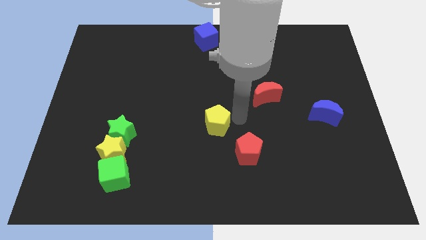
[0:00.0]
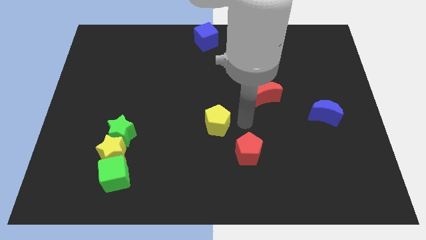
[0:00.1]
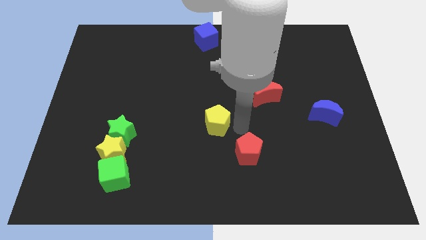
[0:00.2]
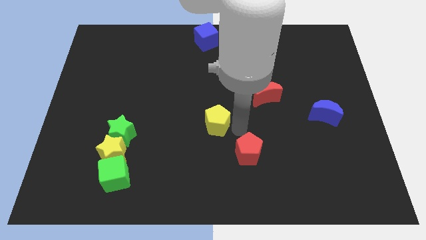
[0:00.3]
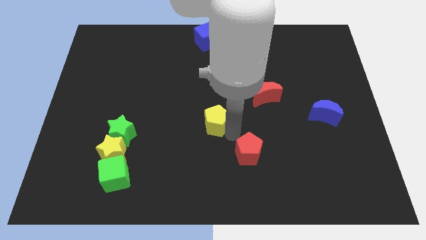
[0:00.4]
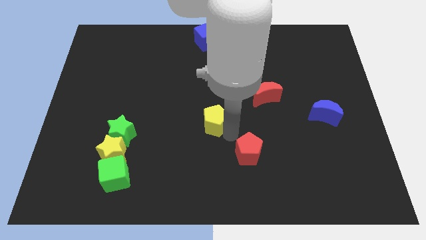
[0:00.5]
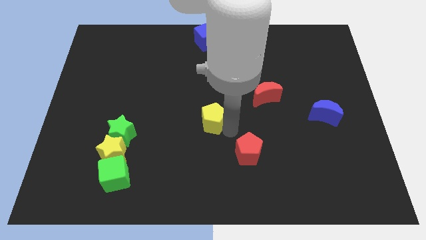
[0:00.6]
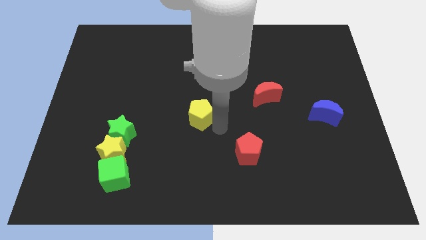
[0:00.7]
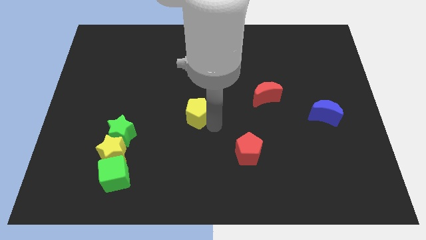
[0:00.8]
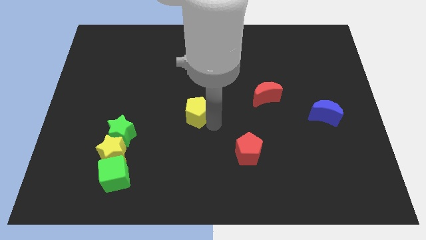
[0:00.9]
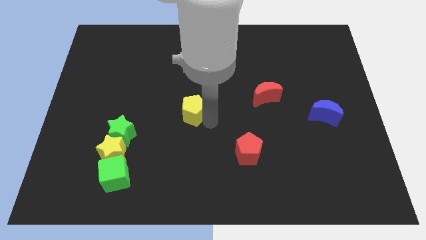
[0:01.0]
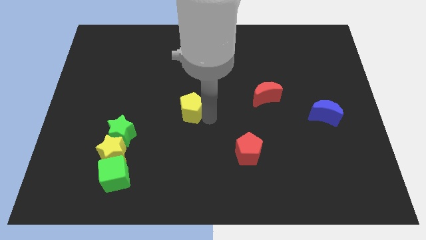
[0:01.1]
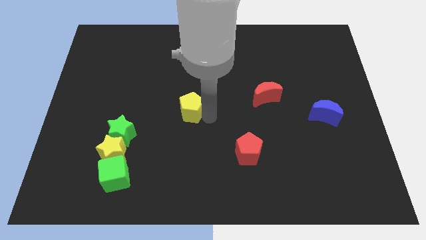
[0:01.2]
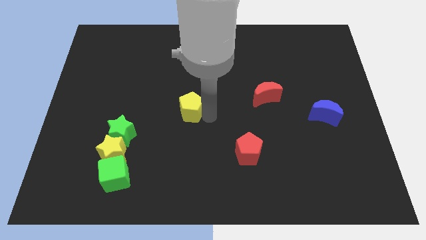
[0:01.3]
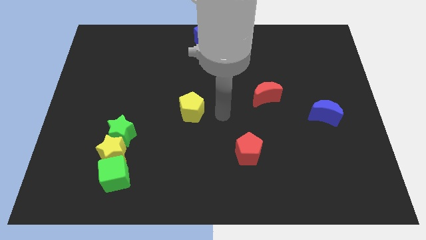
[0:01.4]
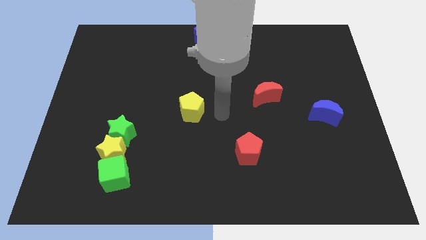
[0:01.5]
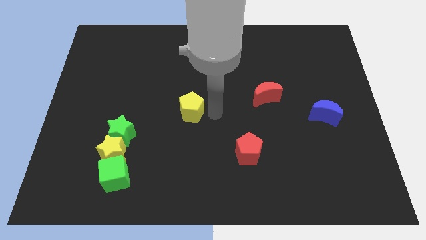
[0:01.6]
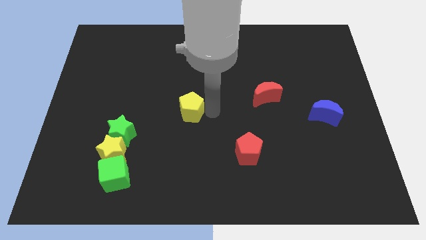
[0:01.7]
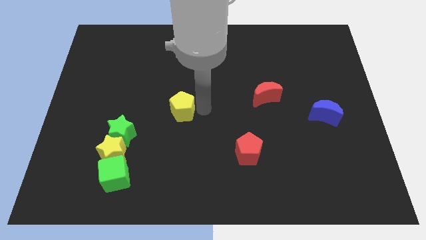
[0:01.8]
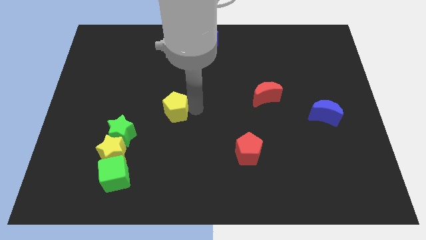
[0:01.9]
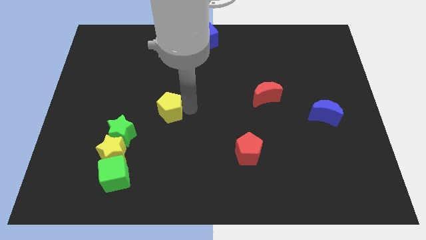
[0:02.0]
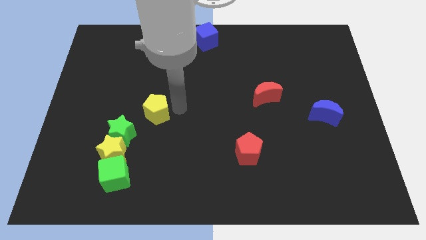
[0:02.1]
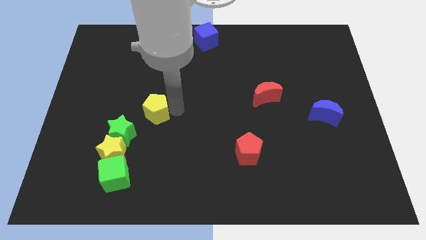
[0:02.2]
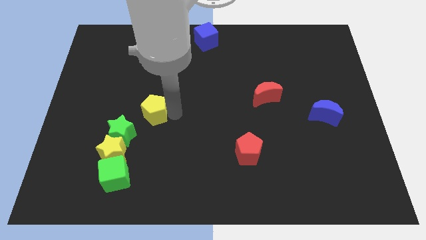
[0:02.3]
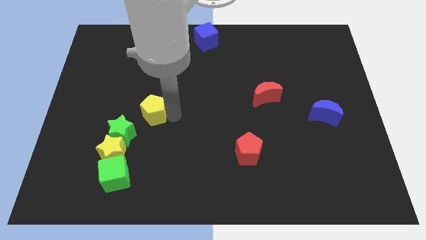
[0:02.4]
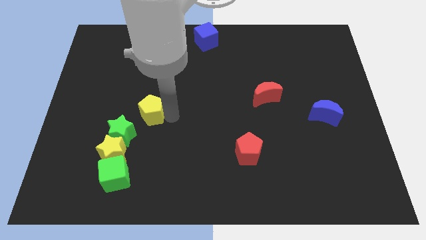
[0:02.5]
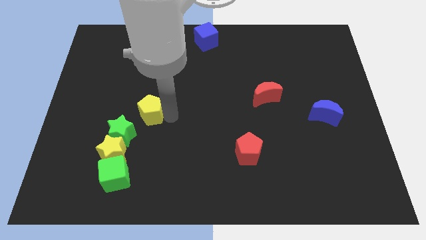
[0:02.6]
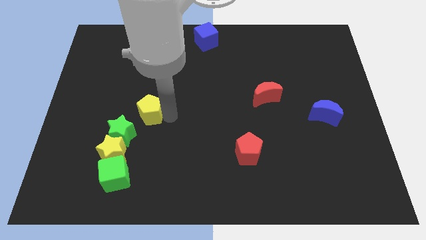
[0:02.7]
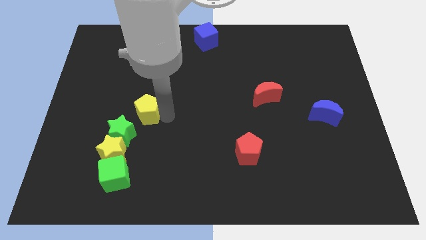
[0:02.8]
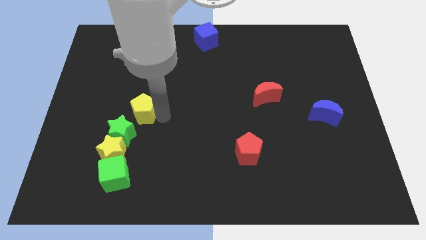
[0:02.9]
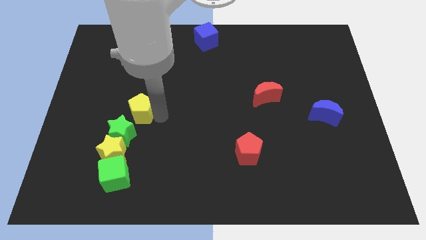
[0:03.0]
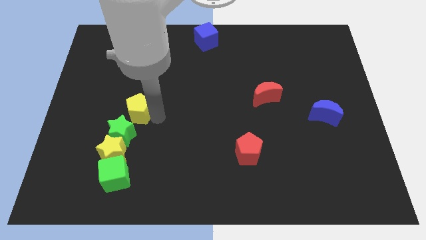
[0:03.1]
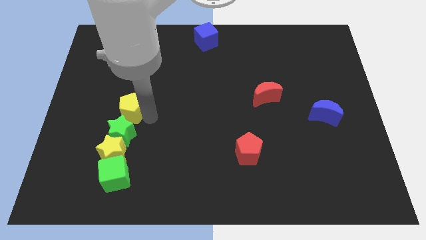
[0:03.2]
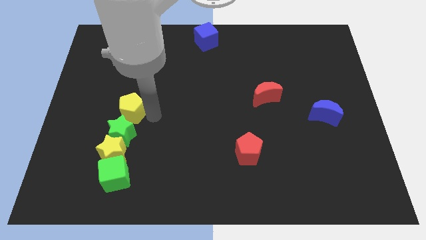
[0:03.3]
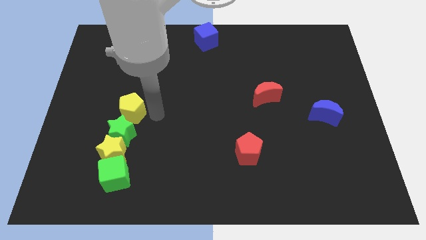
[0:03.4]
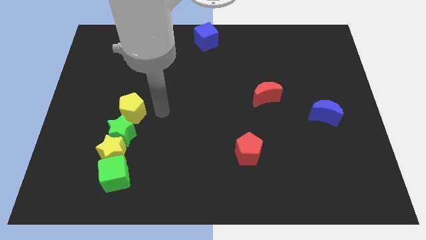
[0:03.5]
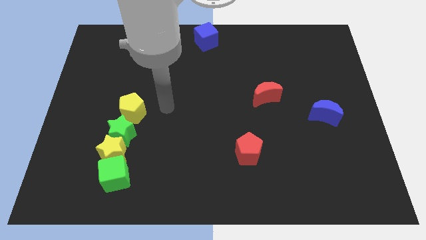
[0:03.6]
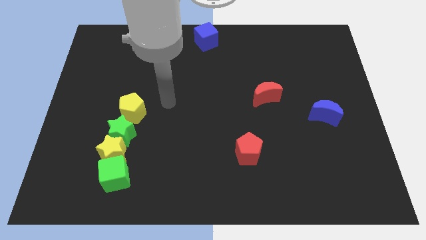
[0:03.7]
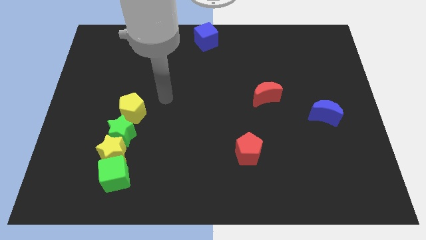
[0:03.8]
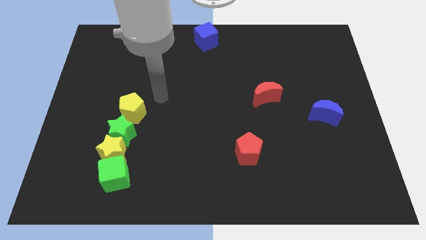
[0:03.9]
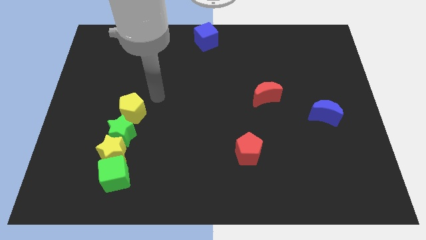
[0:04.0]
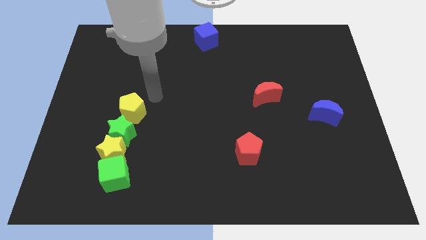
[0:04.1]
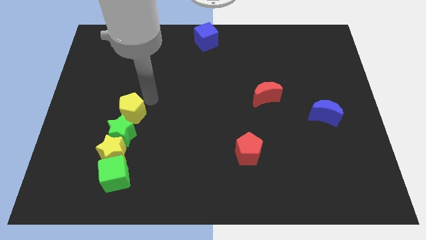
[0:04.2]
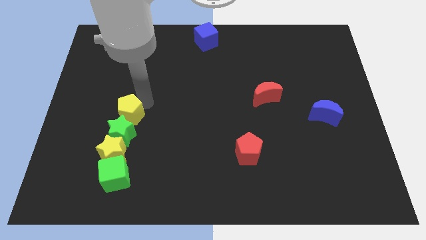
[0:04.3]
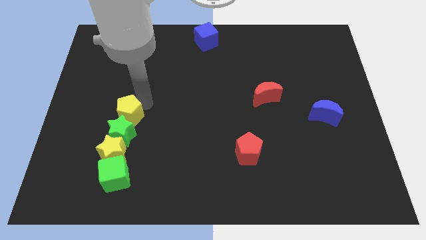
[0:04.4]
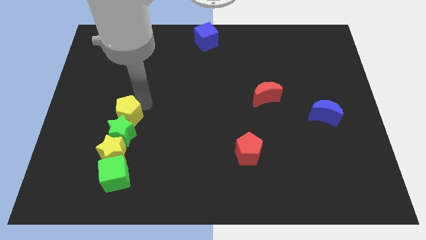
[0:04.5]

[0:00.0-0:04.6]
place the yellow pentagon above the green star

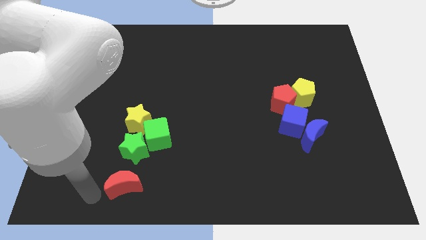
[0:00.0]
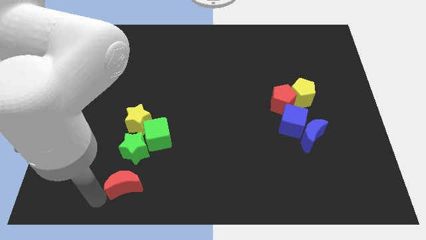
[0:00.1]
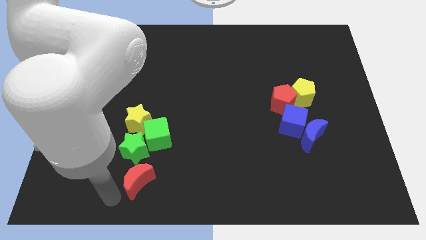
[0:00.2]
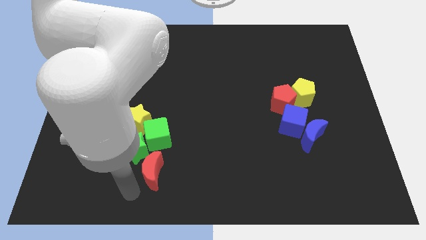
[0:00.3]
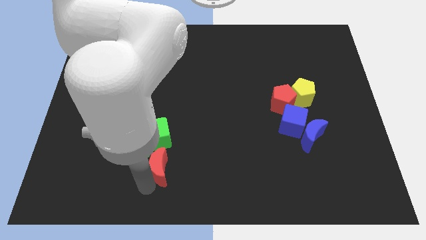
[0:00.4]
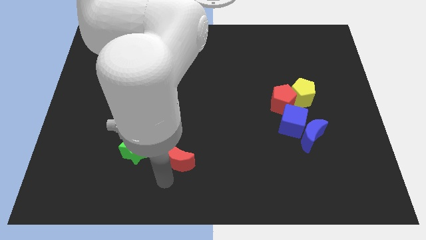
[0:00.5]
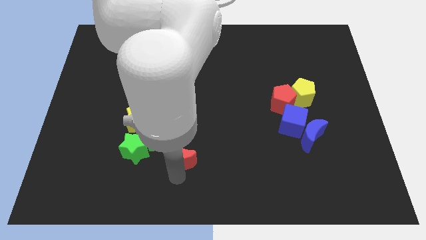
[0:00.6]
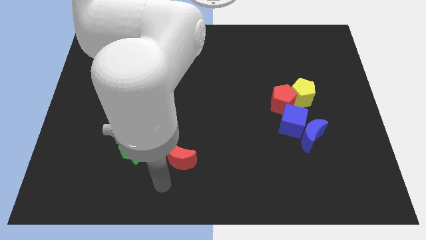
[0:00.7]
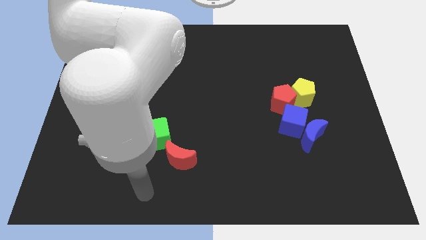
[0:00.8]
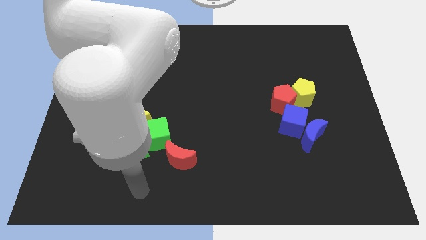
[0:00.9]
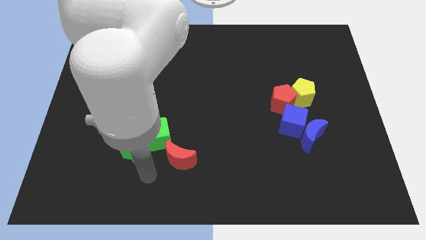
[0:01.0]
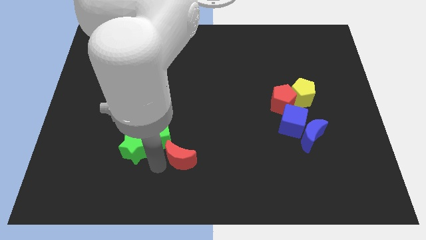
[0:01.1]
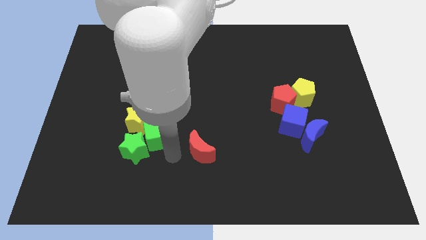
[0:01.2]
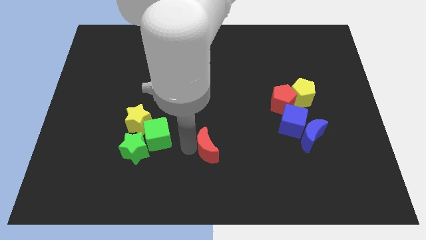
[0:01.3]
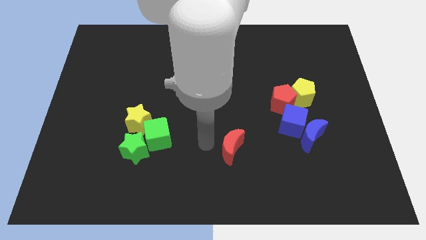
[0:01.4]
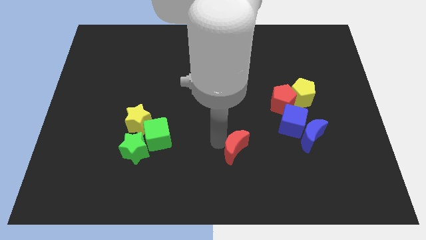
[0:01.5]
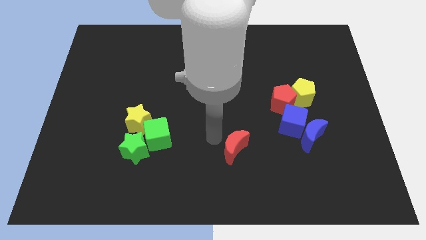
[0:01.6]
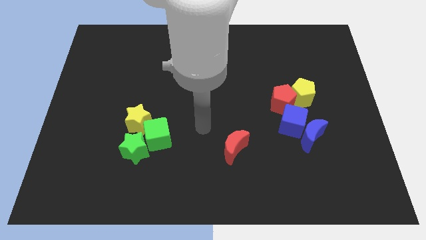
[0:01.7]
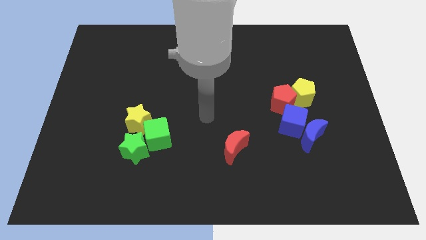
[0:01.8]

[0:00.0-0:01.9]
slide the red moon to the right of green star

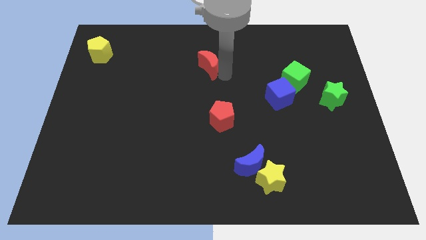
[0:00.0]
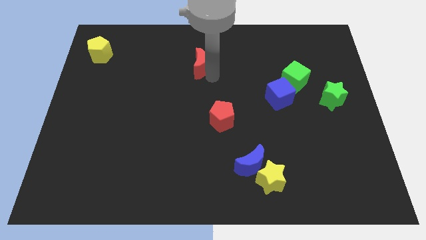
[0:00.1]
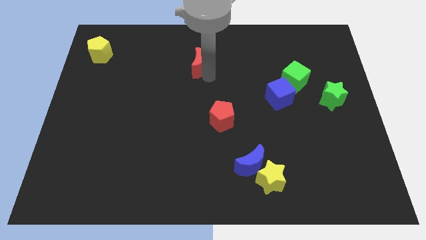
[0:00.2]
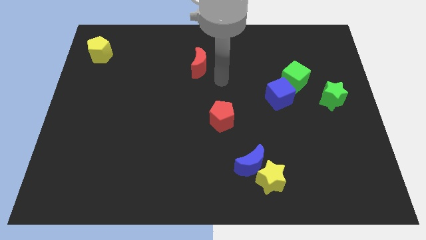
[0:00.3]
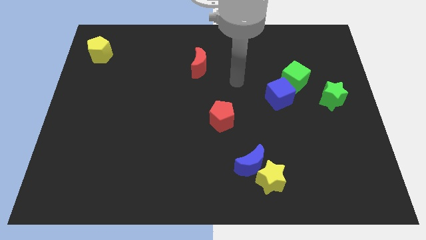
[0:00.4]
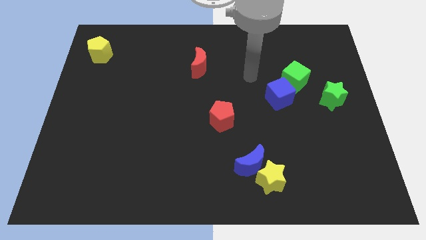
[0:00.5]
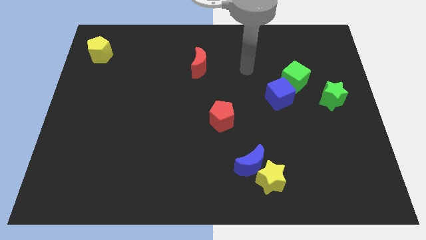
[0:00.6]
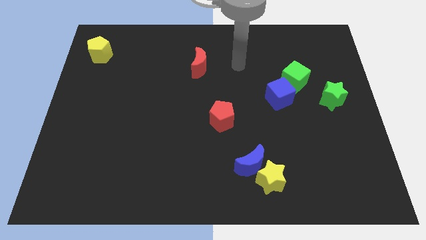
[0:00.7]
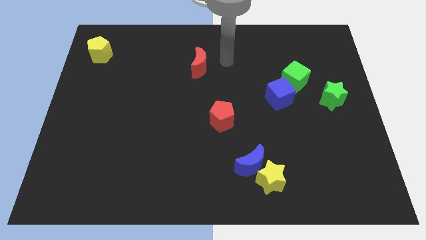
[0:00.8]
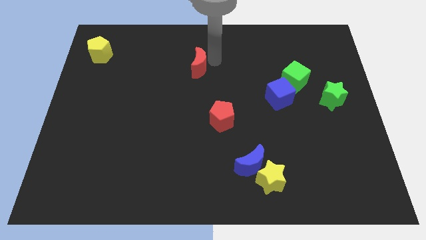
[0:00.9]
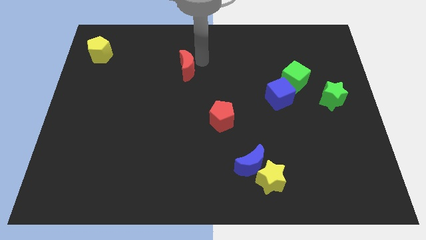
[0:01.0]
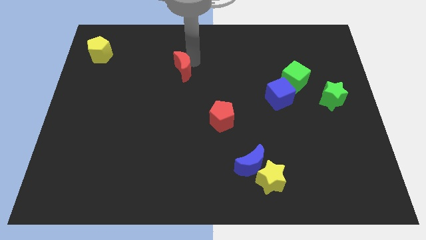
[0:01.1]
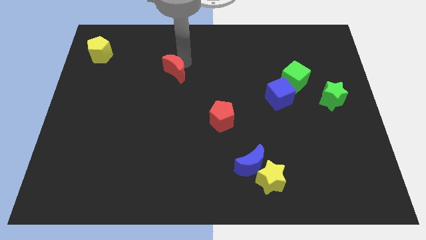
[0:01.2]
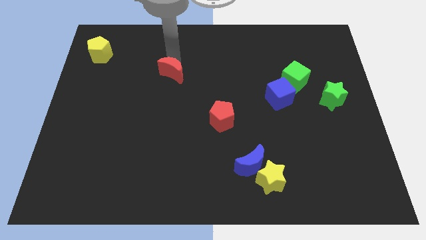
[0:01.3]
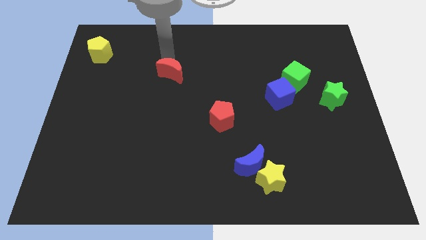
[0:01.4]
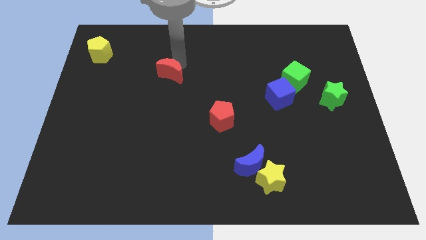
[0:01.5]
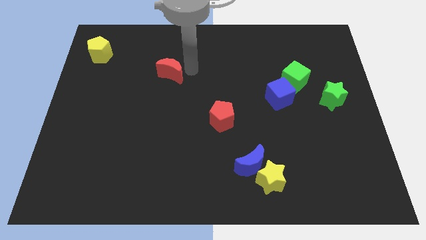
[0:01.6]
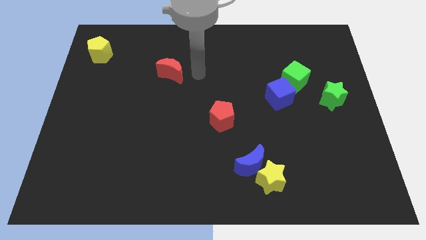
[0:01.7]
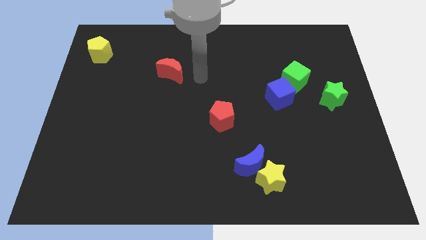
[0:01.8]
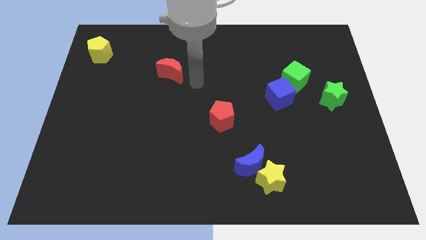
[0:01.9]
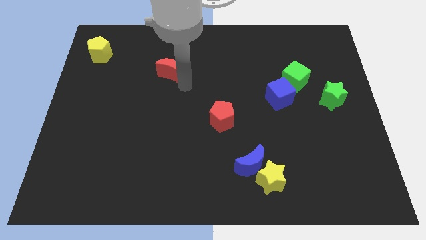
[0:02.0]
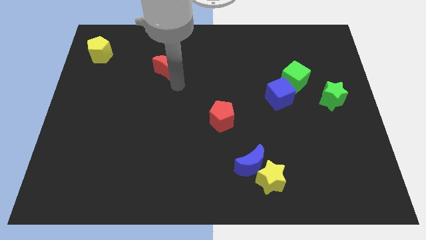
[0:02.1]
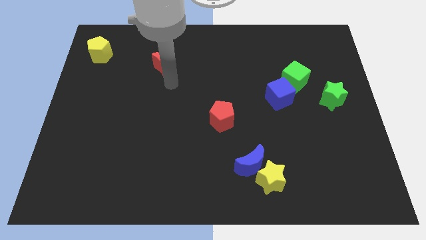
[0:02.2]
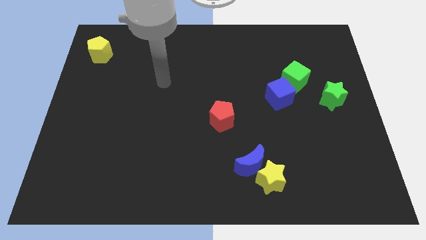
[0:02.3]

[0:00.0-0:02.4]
drag red moon towards left side of the board
